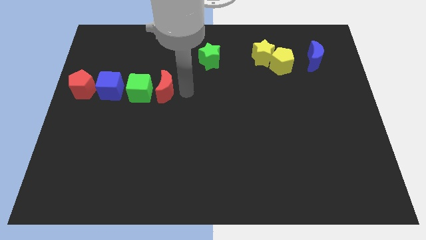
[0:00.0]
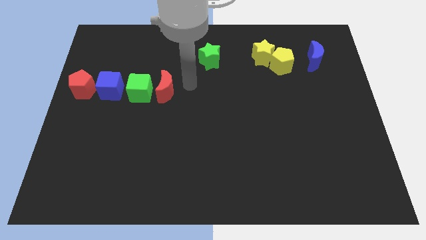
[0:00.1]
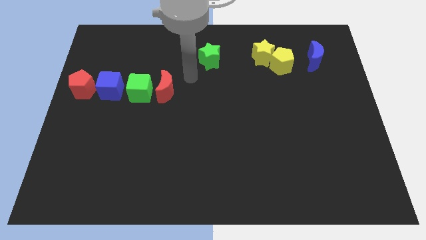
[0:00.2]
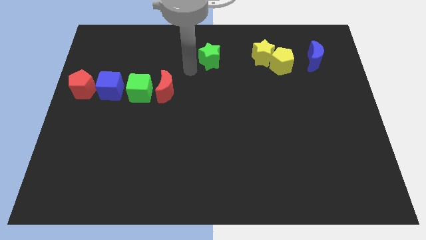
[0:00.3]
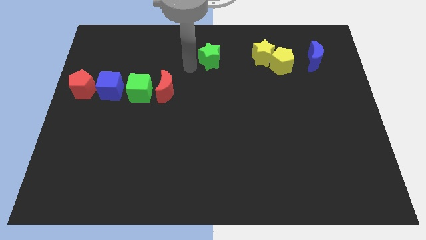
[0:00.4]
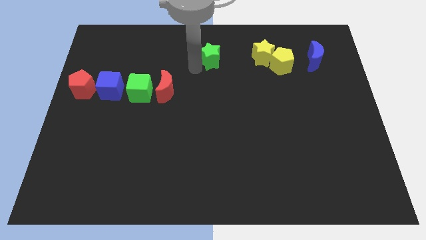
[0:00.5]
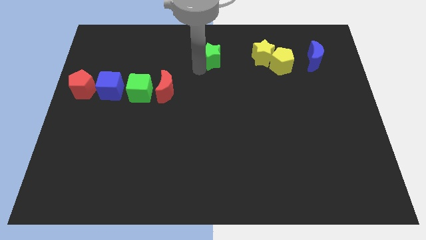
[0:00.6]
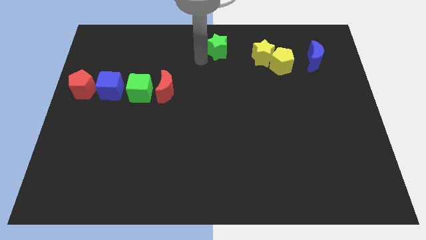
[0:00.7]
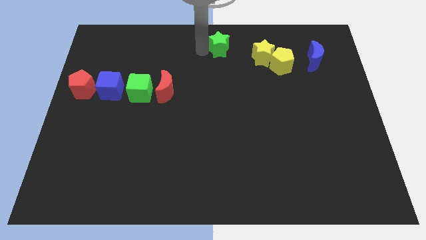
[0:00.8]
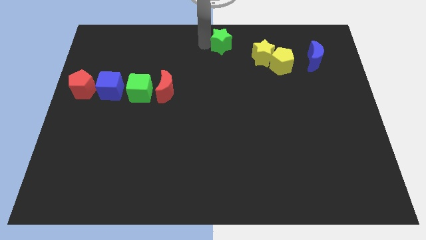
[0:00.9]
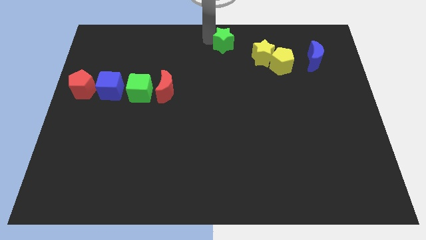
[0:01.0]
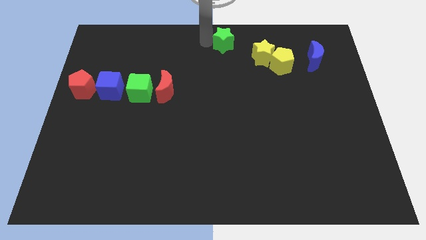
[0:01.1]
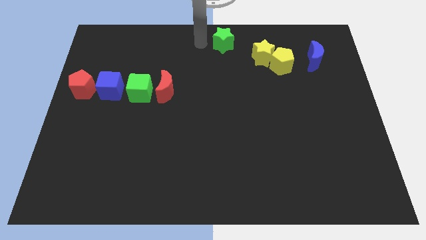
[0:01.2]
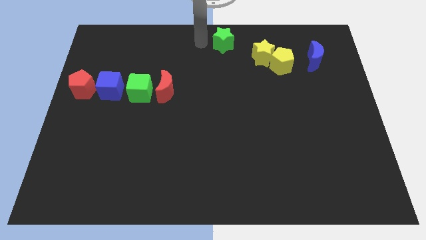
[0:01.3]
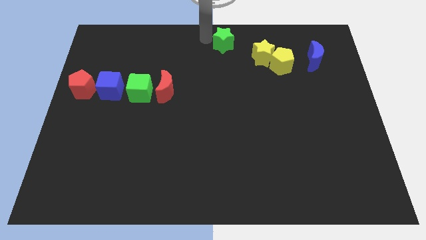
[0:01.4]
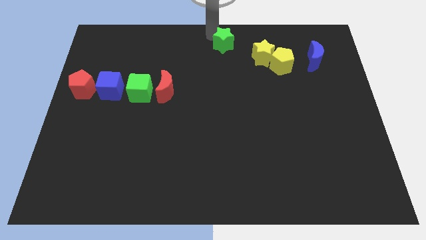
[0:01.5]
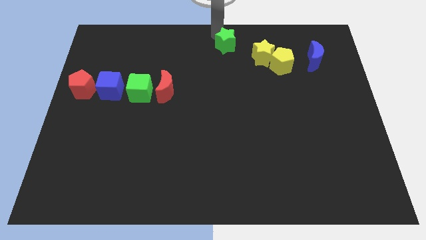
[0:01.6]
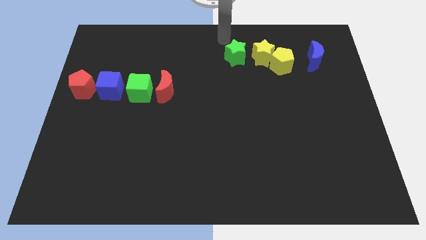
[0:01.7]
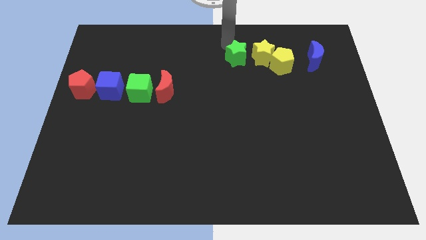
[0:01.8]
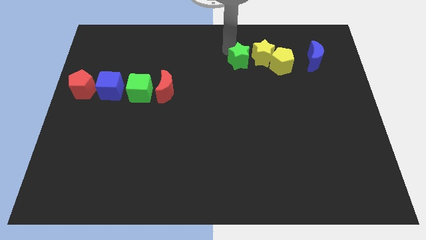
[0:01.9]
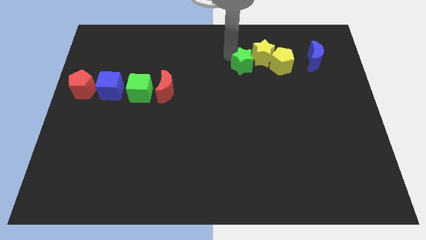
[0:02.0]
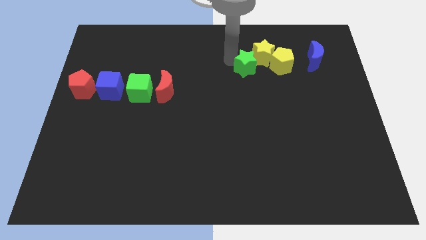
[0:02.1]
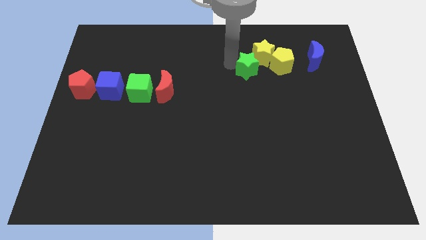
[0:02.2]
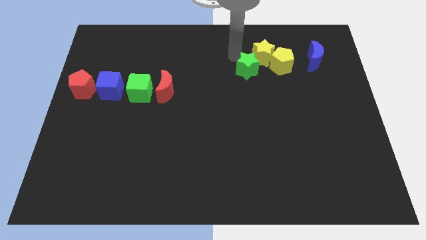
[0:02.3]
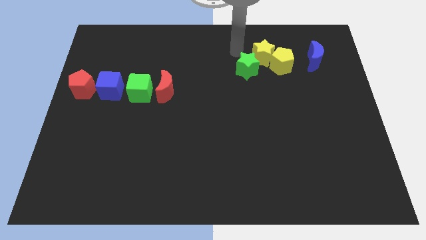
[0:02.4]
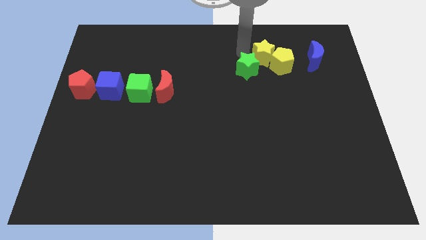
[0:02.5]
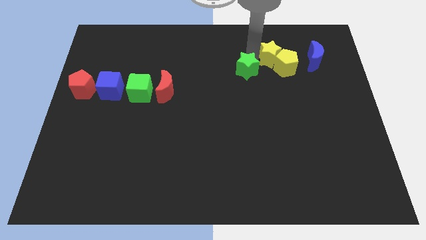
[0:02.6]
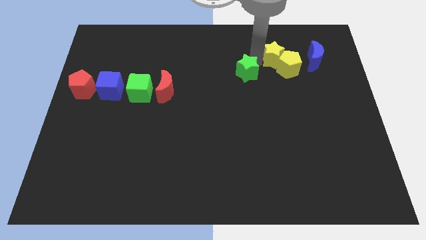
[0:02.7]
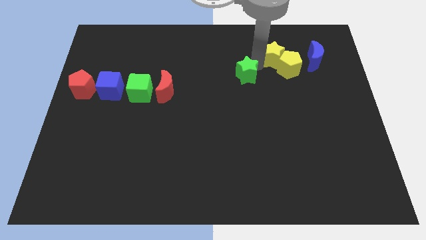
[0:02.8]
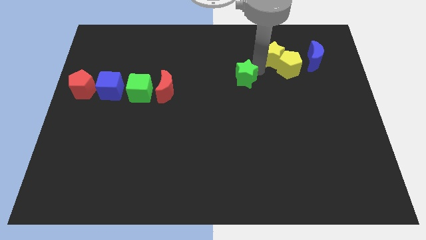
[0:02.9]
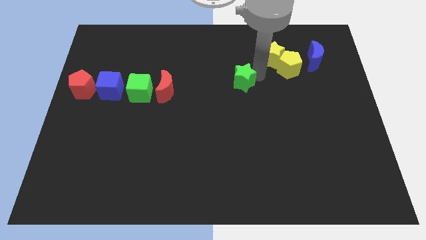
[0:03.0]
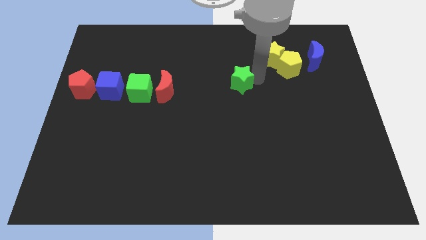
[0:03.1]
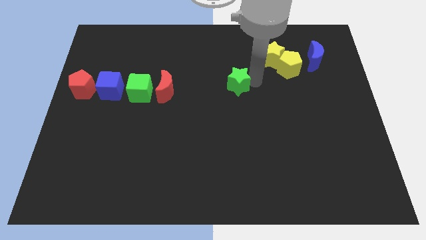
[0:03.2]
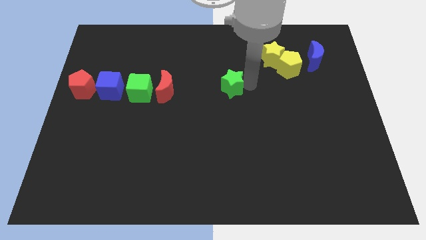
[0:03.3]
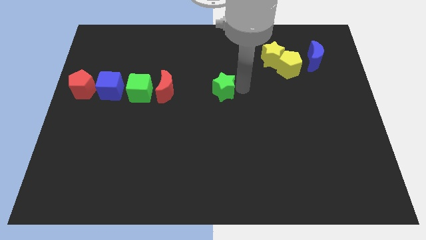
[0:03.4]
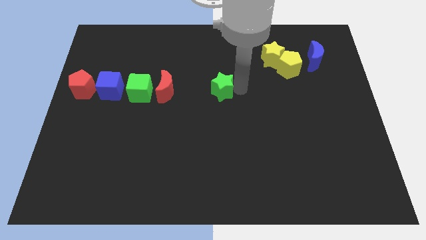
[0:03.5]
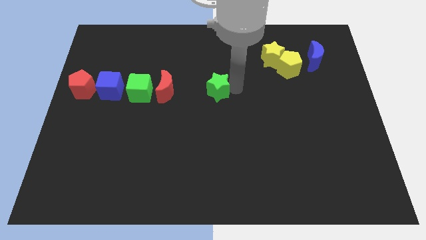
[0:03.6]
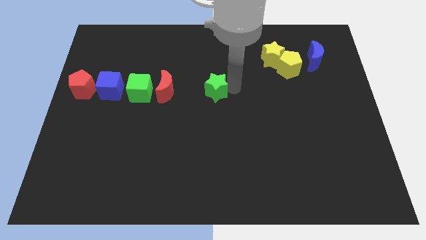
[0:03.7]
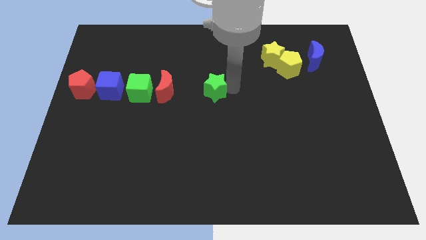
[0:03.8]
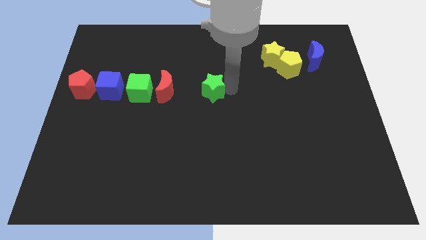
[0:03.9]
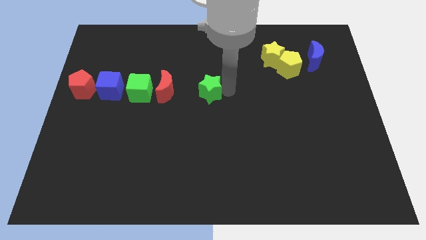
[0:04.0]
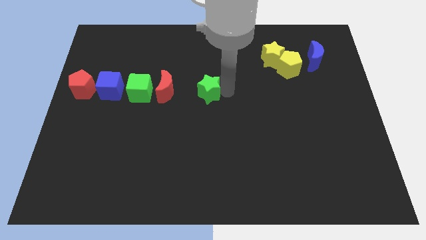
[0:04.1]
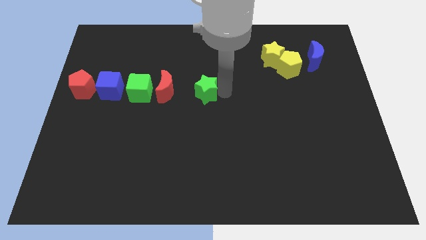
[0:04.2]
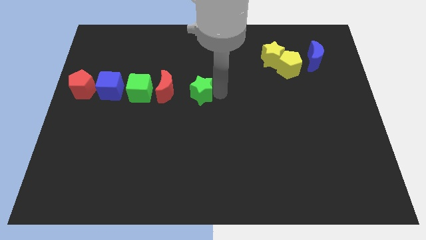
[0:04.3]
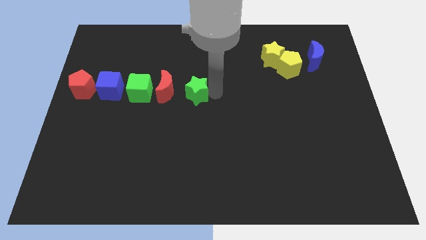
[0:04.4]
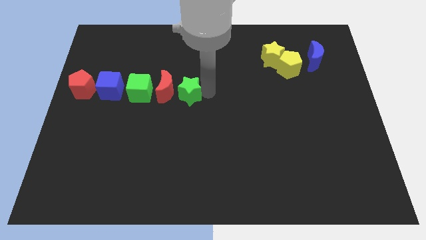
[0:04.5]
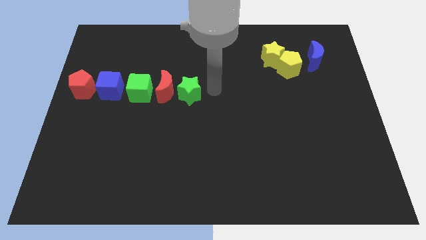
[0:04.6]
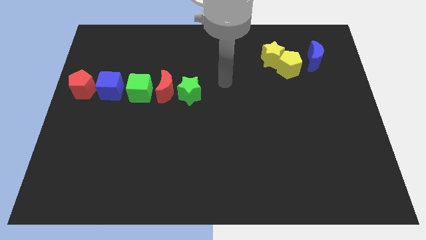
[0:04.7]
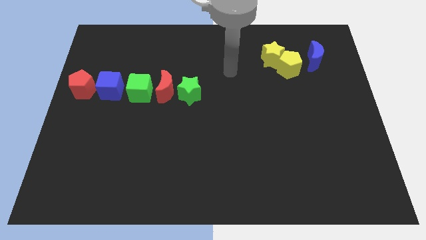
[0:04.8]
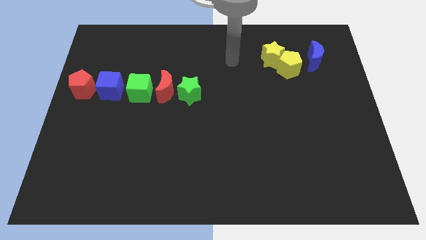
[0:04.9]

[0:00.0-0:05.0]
move the green star to the right of the red crescent

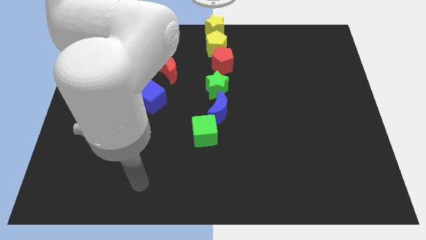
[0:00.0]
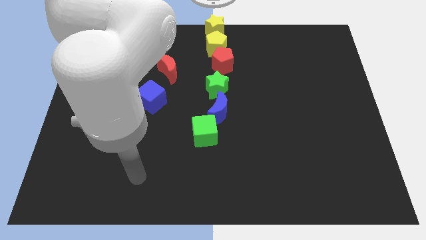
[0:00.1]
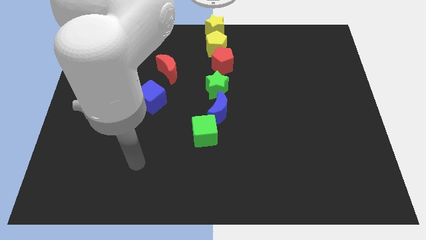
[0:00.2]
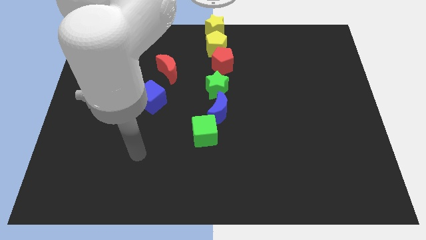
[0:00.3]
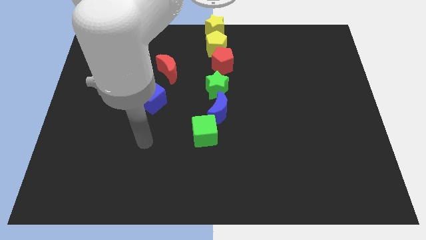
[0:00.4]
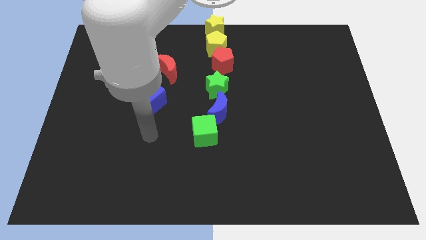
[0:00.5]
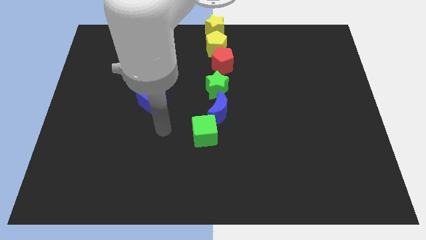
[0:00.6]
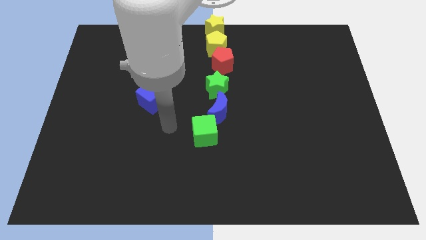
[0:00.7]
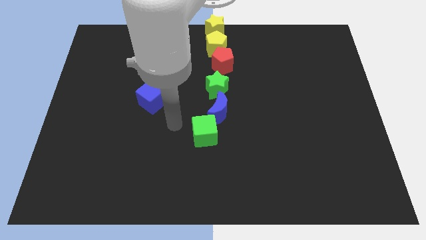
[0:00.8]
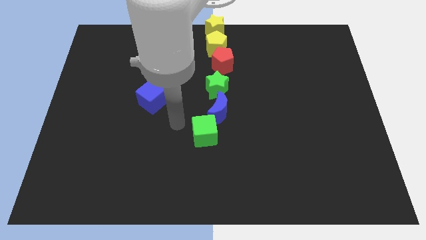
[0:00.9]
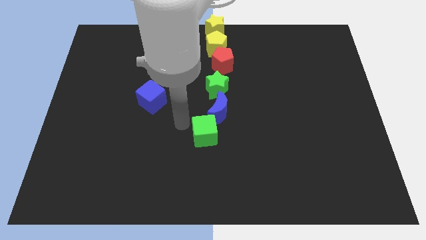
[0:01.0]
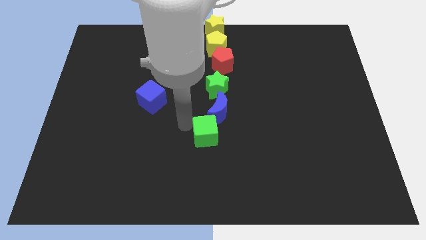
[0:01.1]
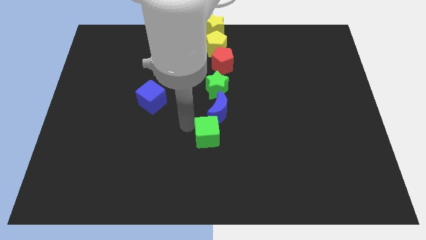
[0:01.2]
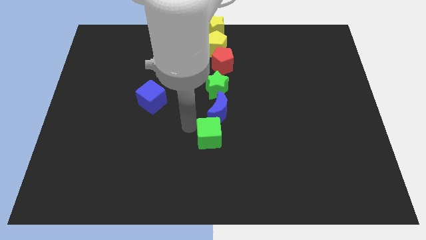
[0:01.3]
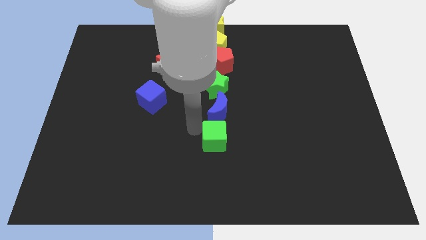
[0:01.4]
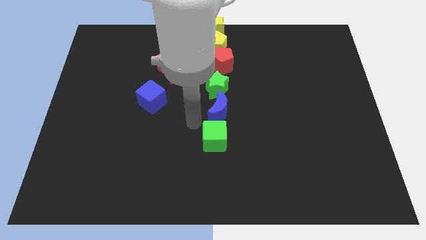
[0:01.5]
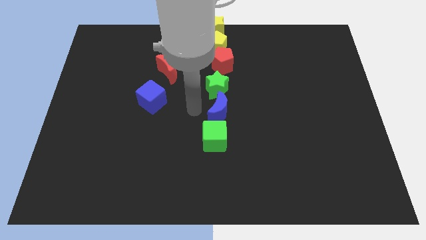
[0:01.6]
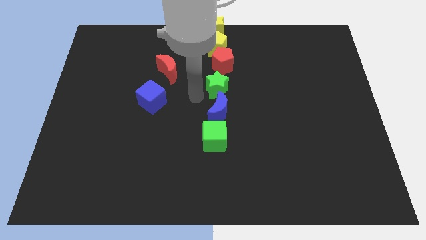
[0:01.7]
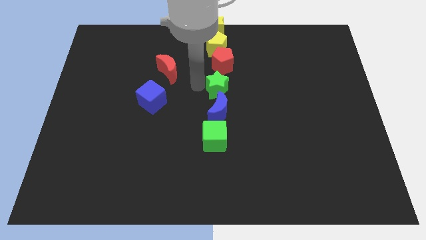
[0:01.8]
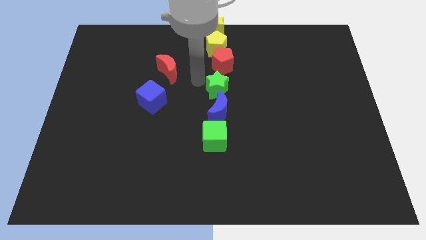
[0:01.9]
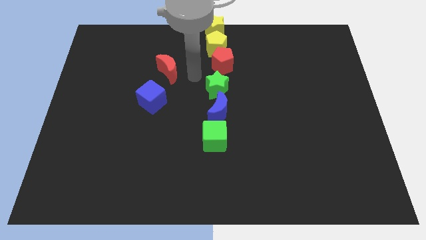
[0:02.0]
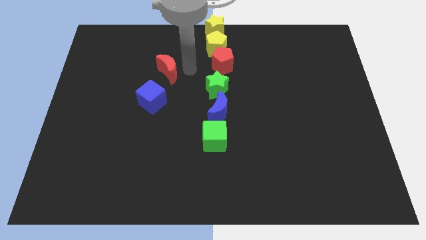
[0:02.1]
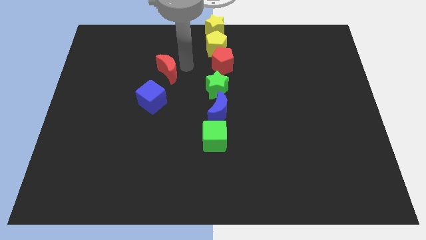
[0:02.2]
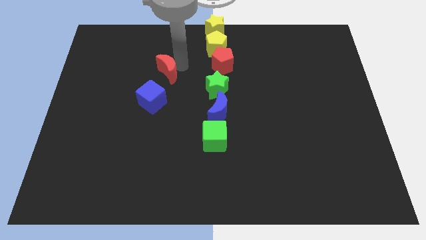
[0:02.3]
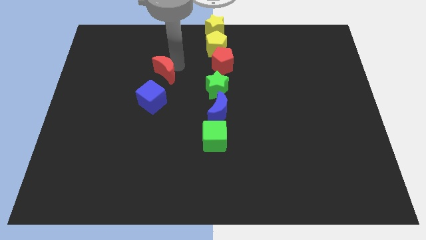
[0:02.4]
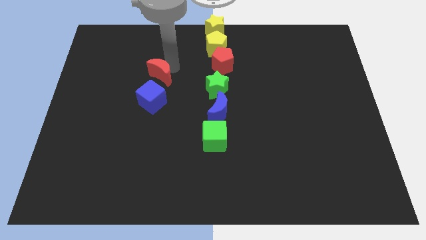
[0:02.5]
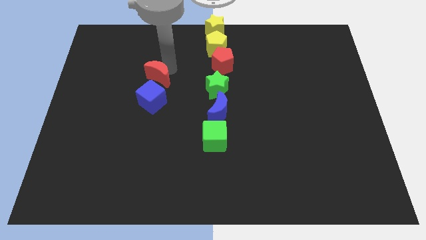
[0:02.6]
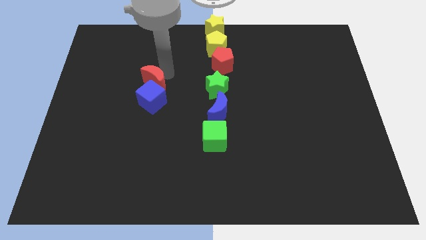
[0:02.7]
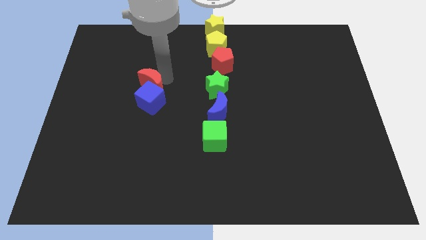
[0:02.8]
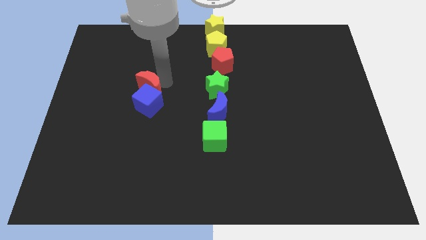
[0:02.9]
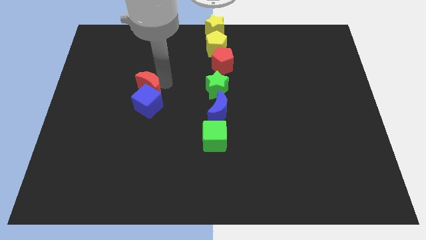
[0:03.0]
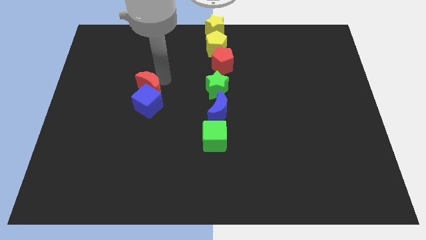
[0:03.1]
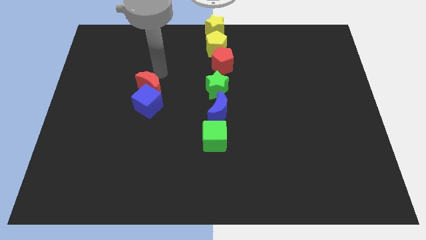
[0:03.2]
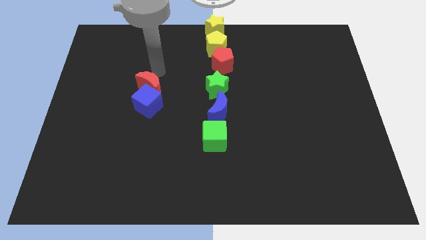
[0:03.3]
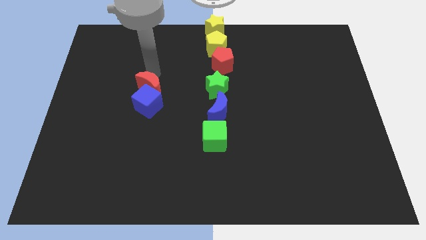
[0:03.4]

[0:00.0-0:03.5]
push red crescent towards blue cube

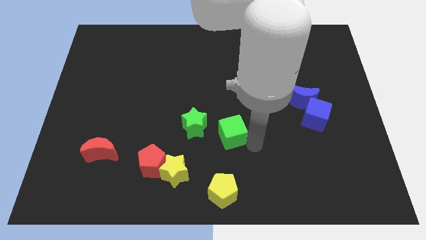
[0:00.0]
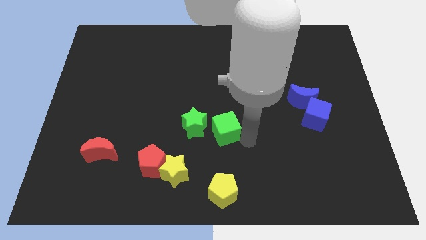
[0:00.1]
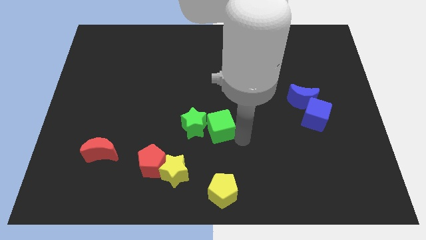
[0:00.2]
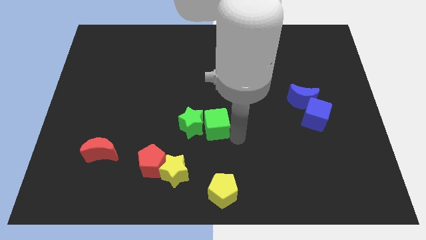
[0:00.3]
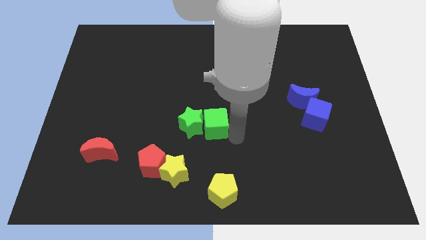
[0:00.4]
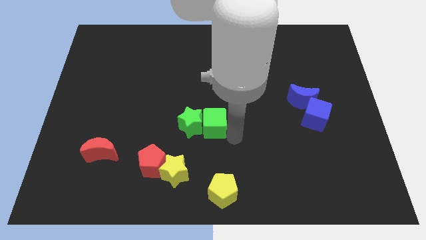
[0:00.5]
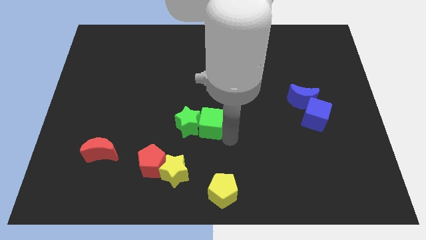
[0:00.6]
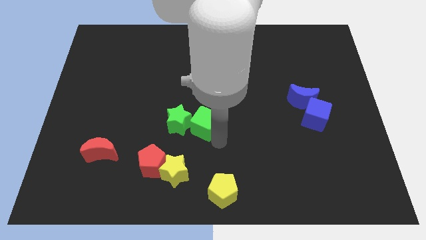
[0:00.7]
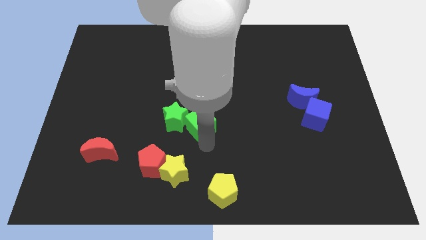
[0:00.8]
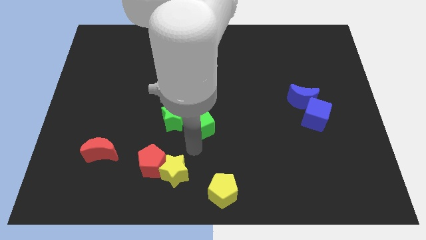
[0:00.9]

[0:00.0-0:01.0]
push the green cube and star to left
